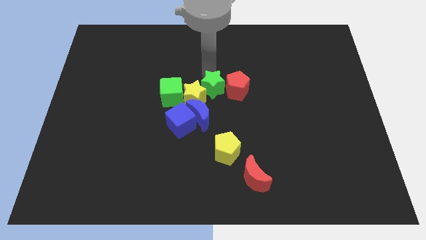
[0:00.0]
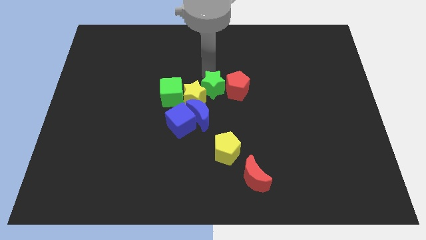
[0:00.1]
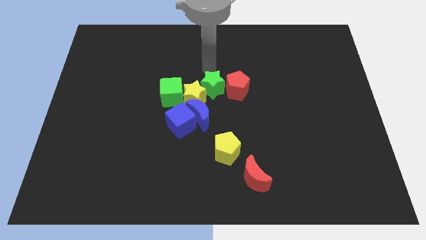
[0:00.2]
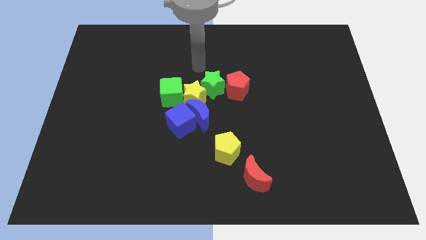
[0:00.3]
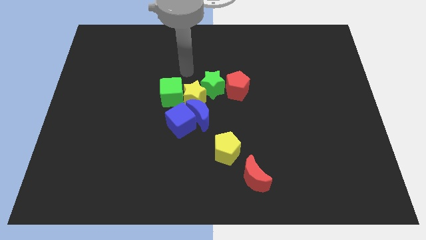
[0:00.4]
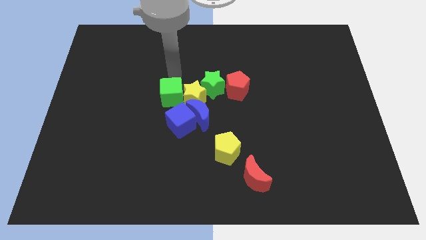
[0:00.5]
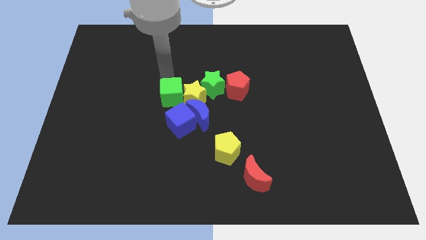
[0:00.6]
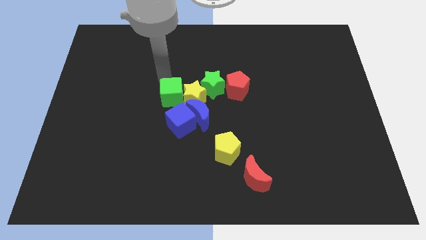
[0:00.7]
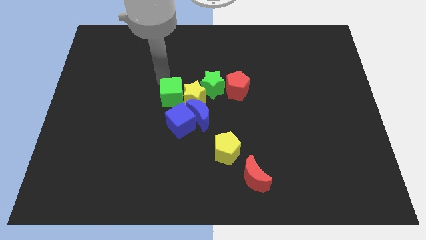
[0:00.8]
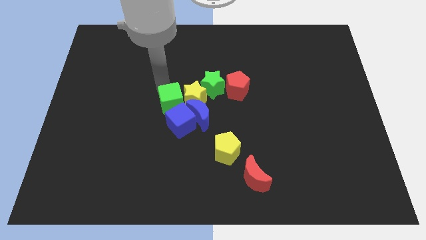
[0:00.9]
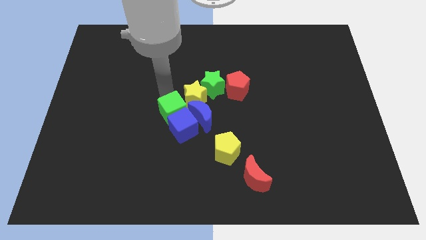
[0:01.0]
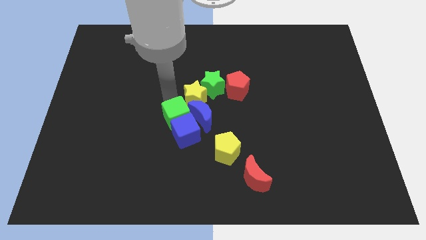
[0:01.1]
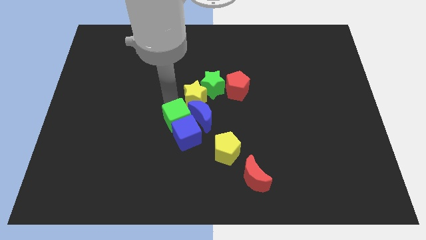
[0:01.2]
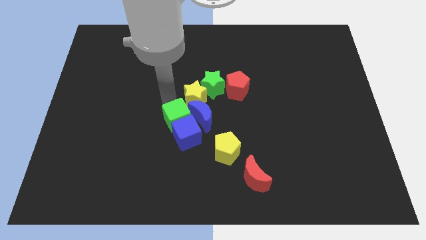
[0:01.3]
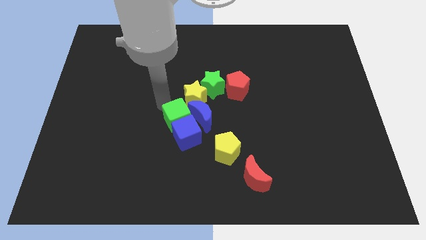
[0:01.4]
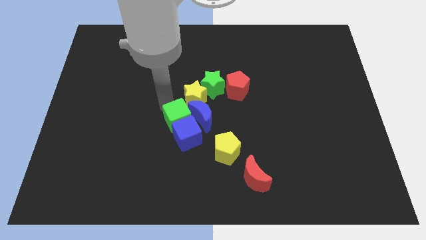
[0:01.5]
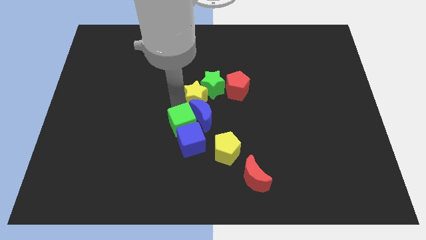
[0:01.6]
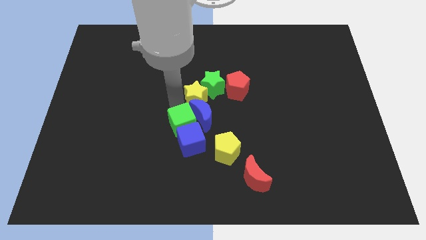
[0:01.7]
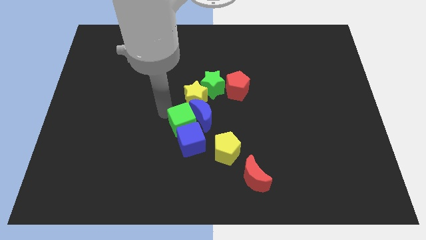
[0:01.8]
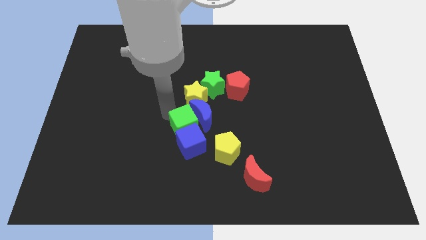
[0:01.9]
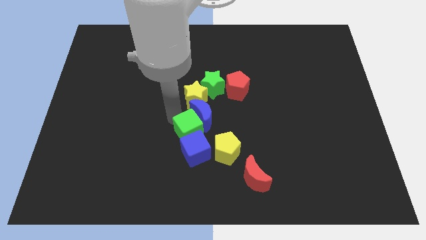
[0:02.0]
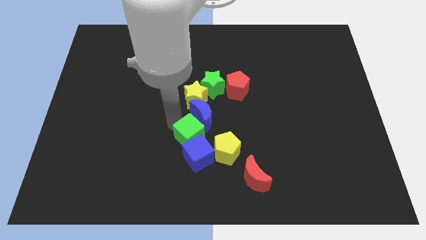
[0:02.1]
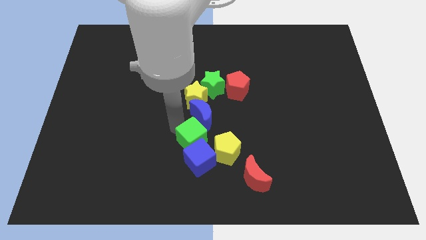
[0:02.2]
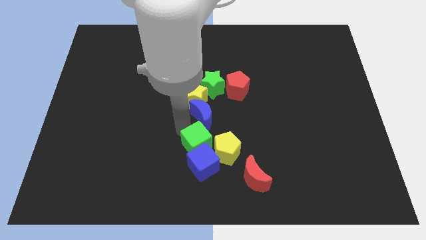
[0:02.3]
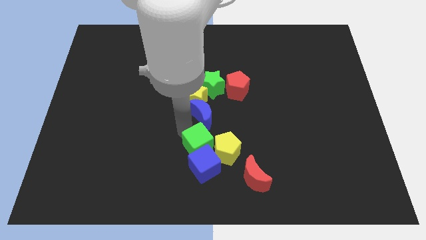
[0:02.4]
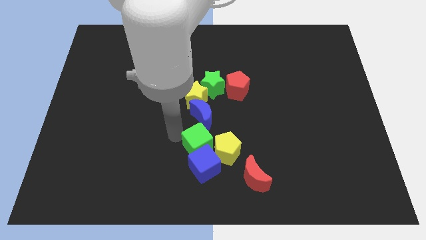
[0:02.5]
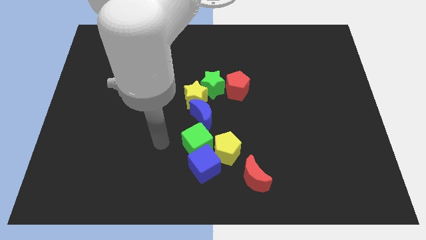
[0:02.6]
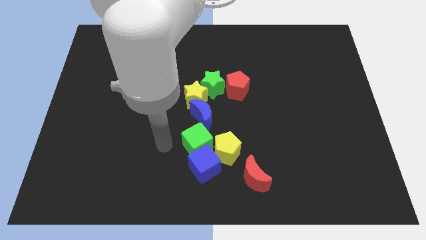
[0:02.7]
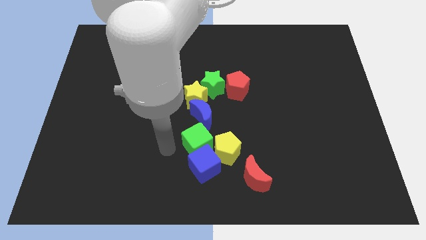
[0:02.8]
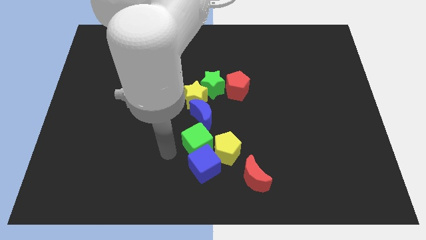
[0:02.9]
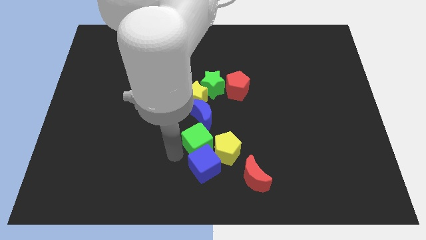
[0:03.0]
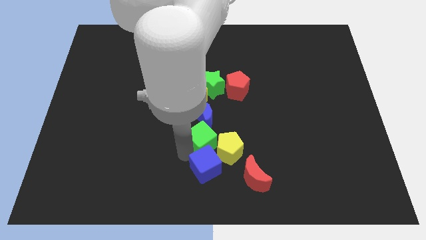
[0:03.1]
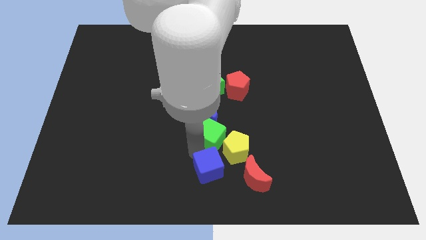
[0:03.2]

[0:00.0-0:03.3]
place the green cube in between the blue cube and blue crescent

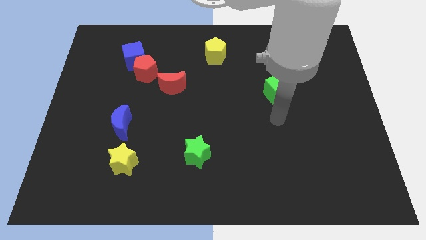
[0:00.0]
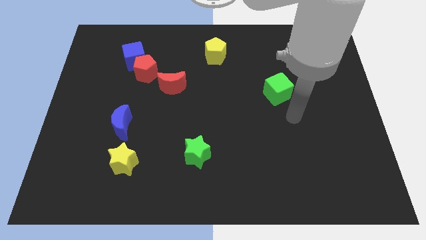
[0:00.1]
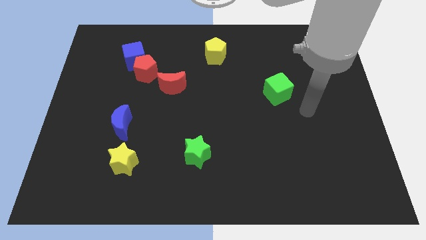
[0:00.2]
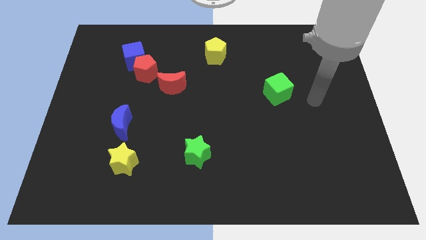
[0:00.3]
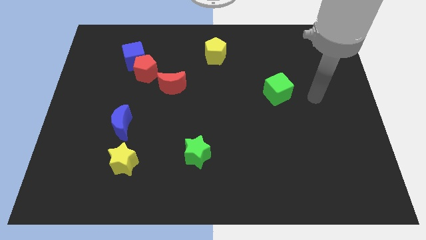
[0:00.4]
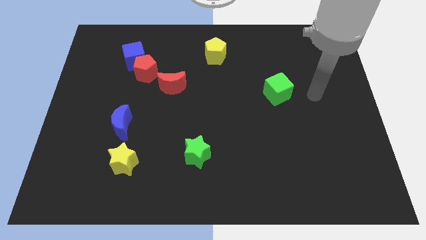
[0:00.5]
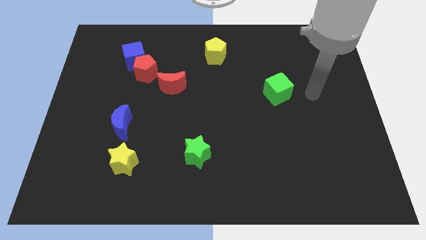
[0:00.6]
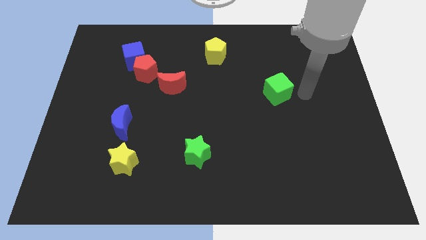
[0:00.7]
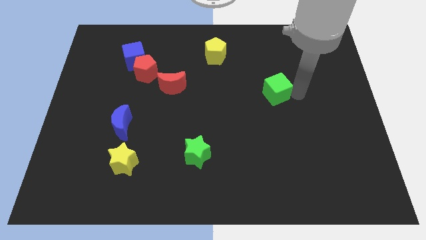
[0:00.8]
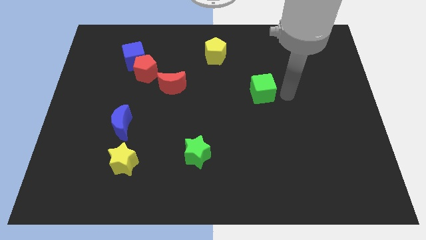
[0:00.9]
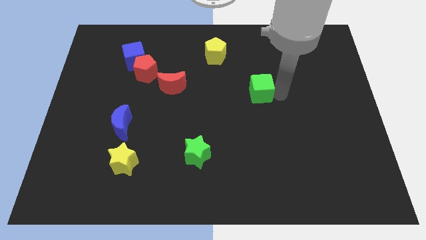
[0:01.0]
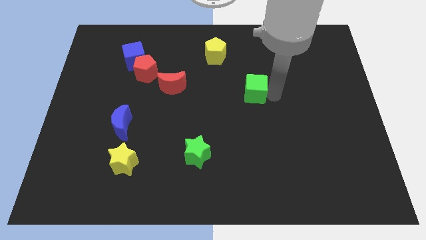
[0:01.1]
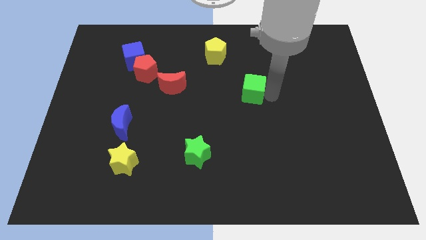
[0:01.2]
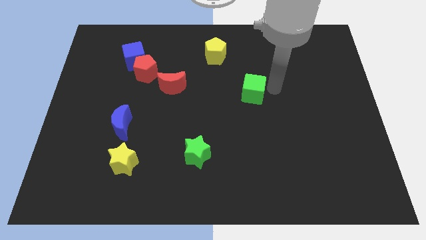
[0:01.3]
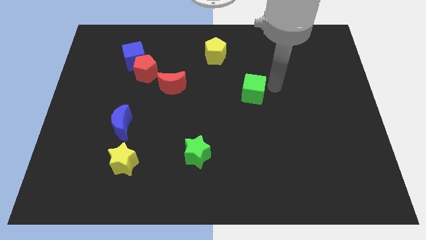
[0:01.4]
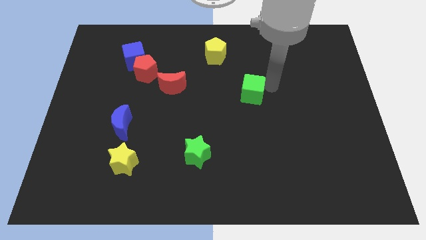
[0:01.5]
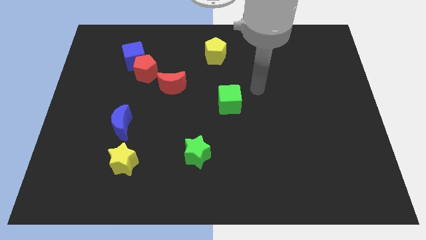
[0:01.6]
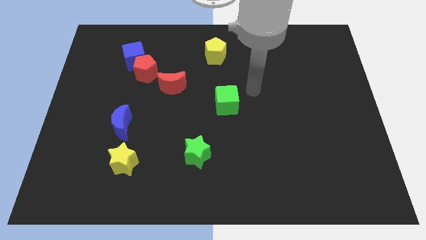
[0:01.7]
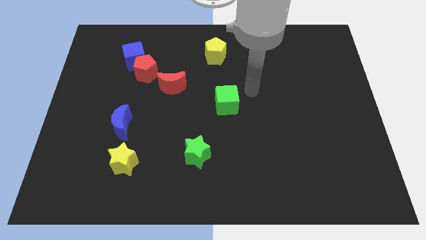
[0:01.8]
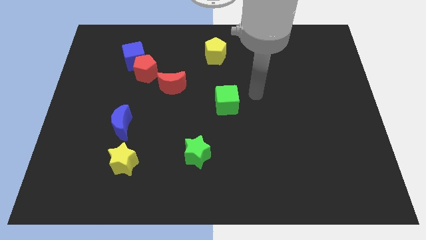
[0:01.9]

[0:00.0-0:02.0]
move the green cube below the yellow pentagon

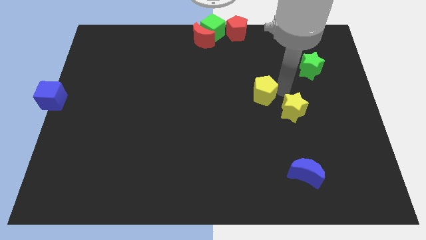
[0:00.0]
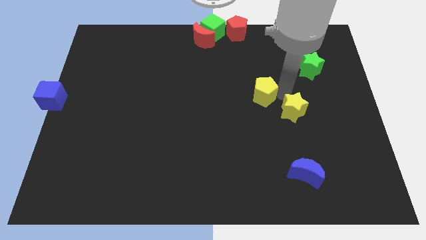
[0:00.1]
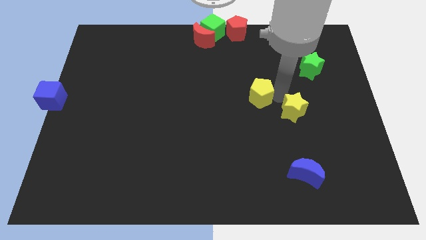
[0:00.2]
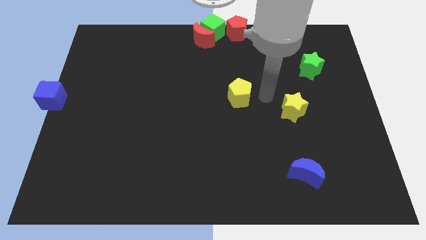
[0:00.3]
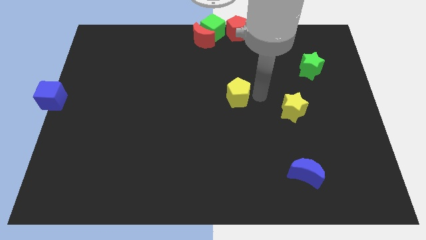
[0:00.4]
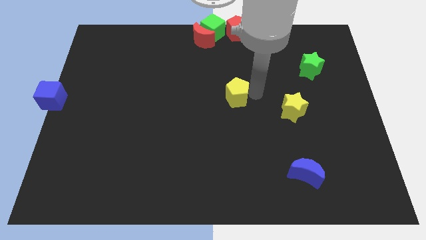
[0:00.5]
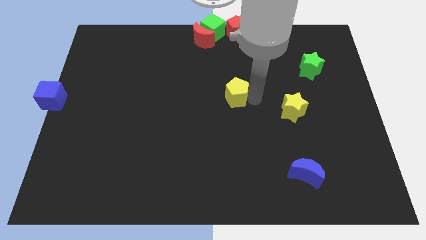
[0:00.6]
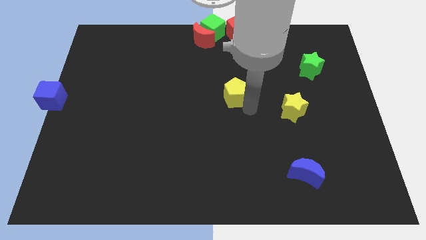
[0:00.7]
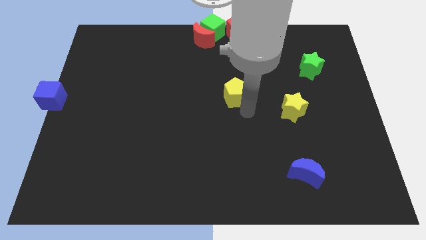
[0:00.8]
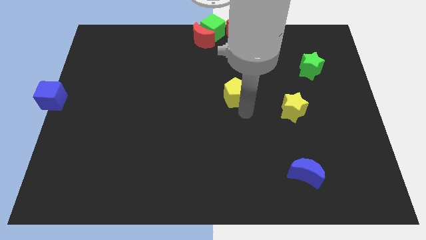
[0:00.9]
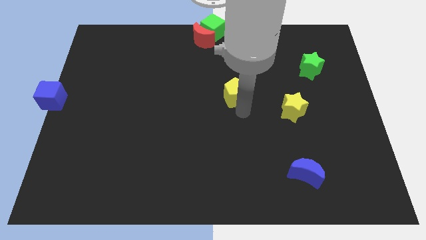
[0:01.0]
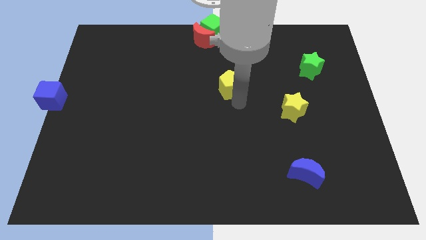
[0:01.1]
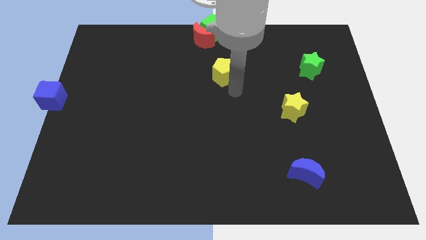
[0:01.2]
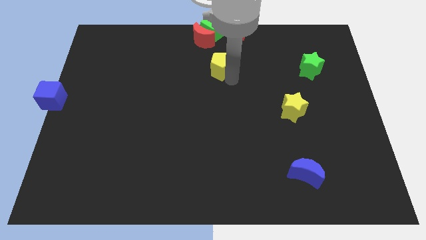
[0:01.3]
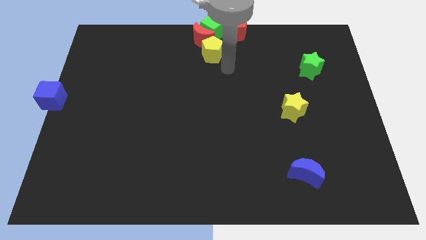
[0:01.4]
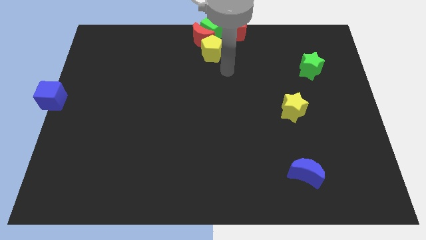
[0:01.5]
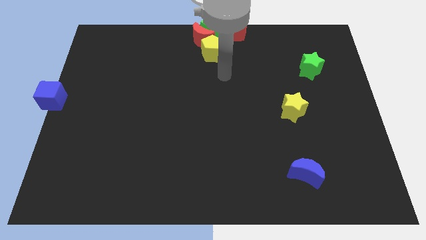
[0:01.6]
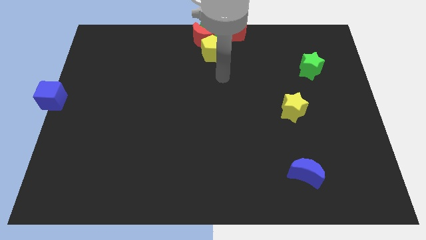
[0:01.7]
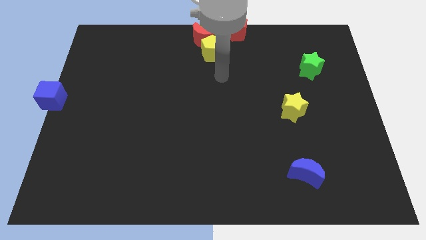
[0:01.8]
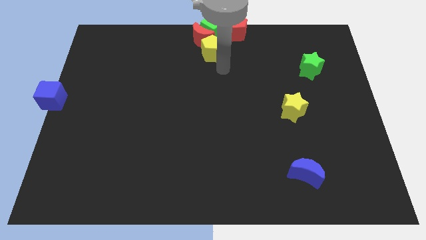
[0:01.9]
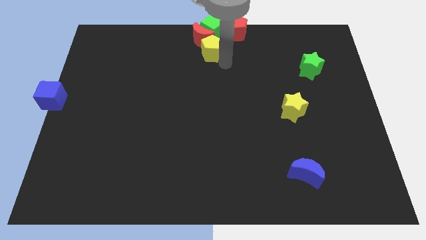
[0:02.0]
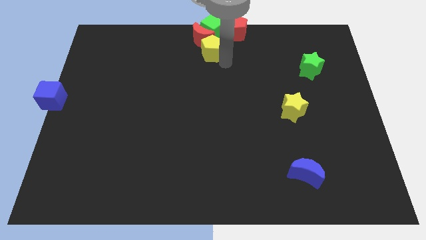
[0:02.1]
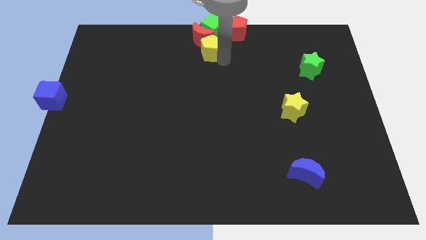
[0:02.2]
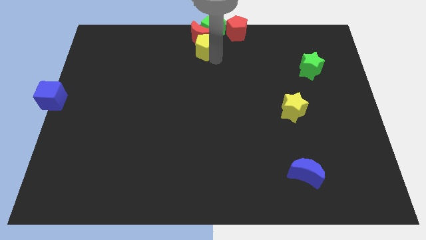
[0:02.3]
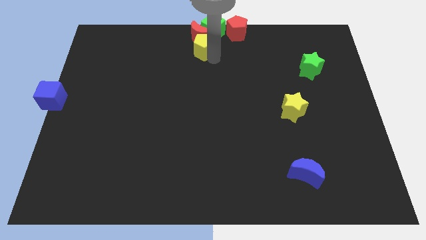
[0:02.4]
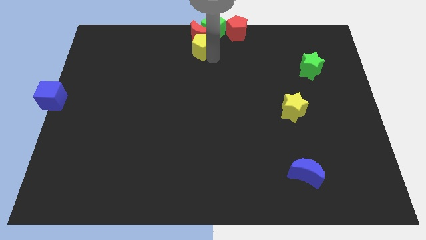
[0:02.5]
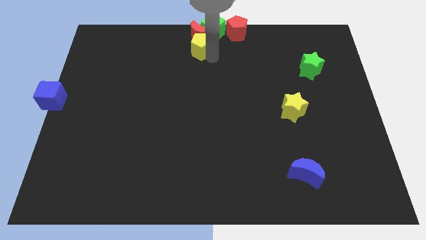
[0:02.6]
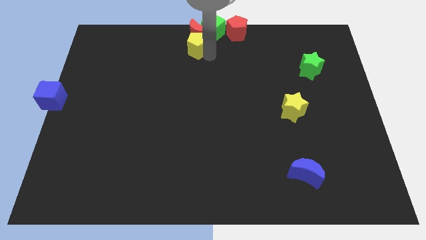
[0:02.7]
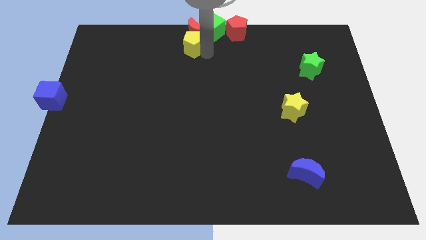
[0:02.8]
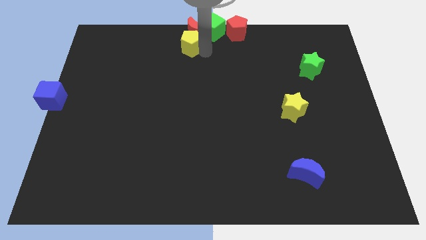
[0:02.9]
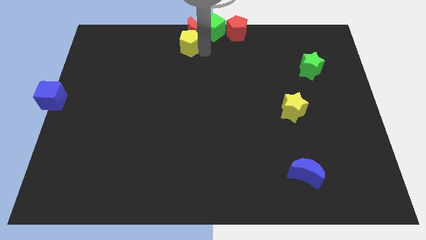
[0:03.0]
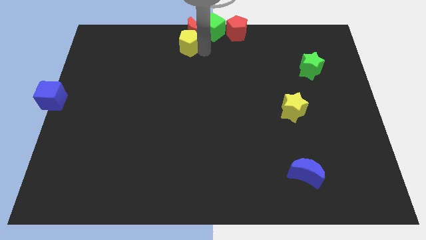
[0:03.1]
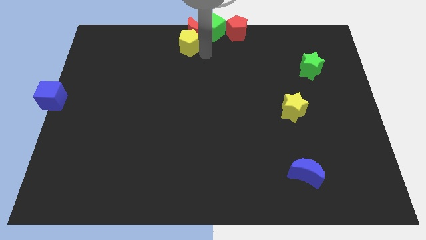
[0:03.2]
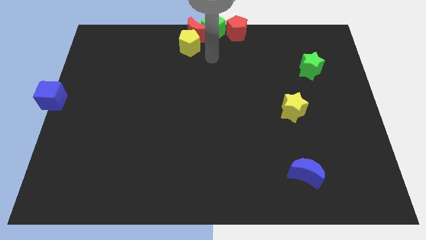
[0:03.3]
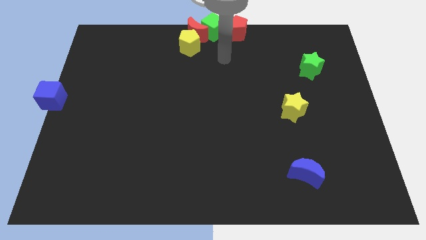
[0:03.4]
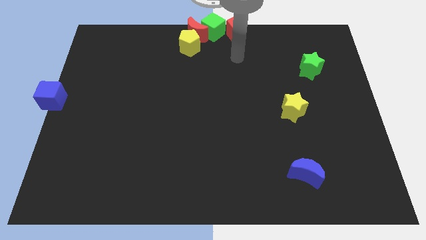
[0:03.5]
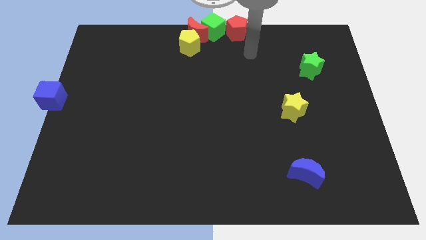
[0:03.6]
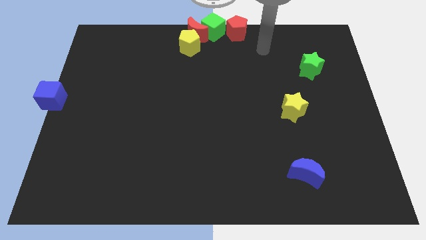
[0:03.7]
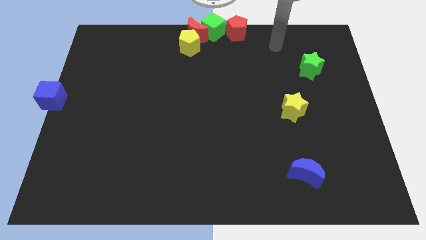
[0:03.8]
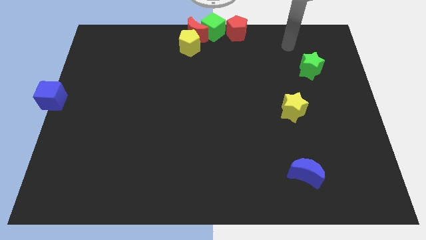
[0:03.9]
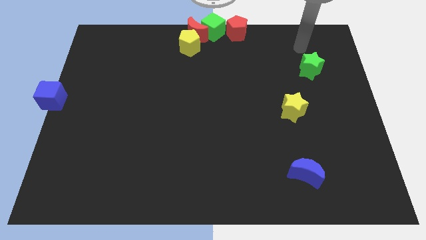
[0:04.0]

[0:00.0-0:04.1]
move the yellow pentagon below into red moon
